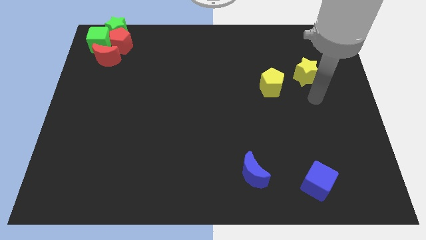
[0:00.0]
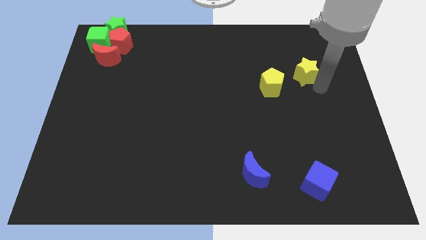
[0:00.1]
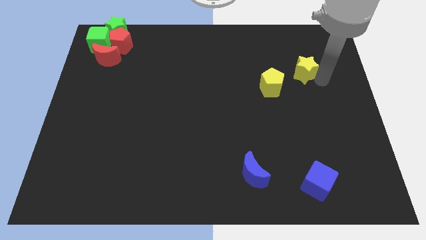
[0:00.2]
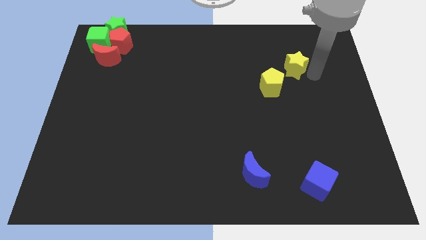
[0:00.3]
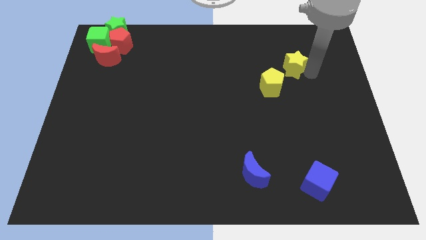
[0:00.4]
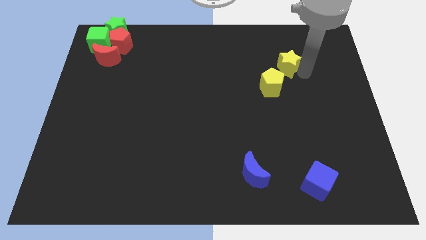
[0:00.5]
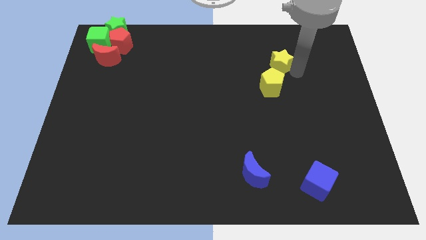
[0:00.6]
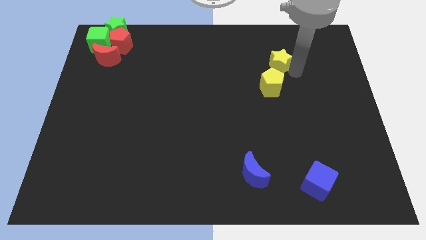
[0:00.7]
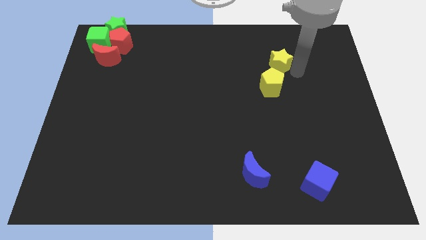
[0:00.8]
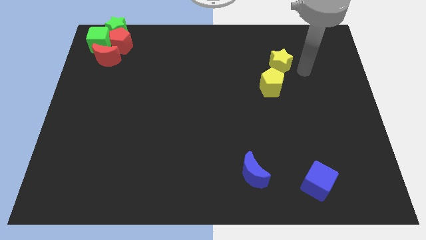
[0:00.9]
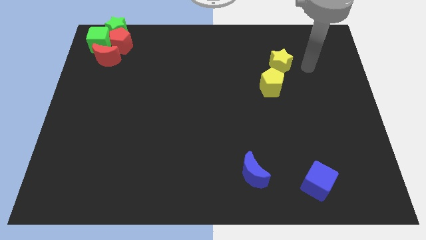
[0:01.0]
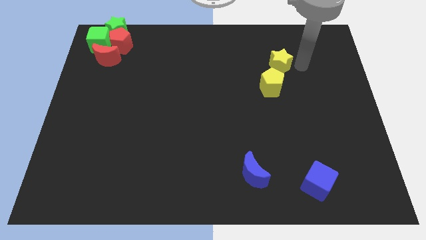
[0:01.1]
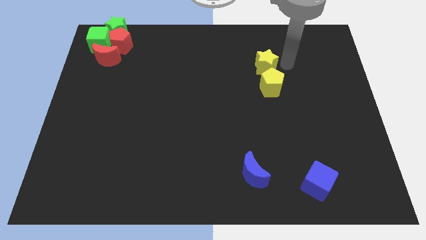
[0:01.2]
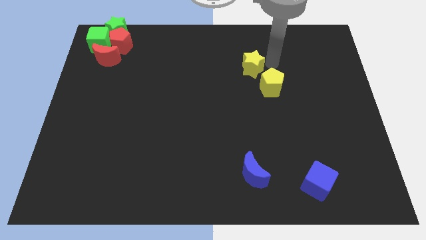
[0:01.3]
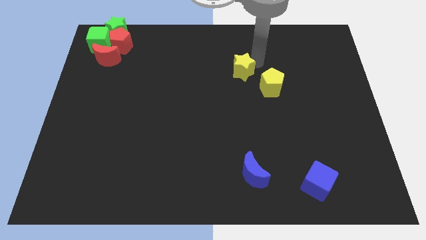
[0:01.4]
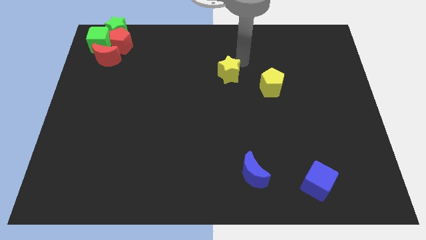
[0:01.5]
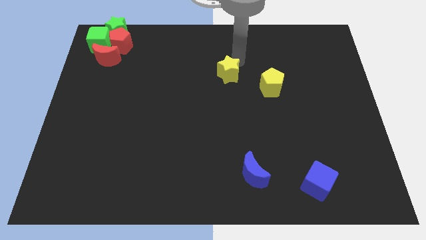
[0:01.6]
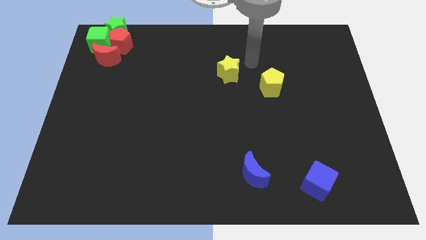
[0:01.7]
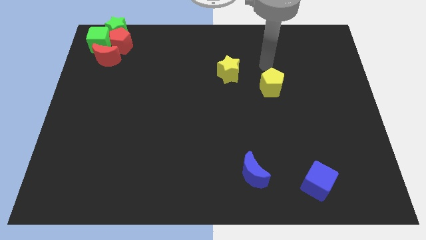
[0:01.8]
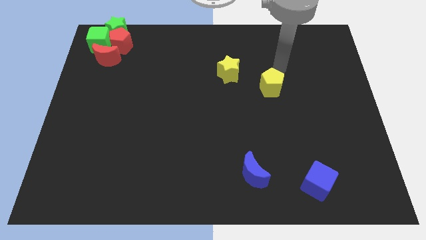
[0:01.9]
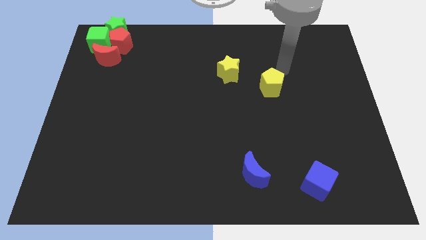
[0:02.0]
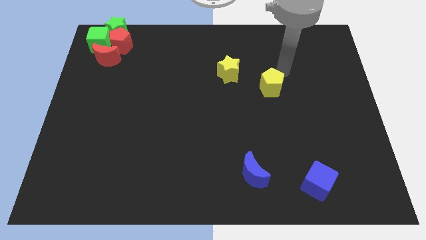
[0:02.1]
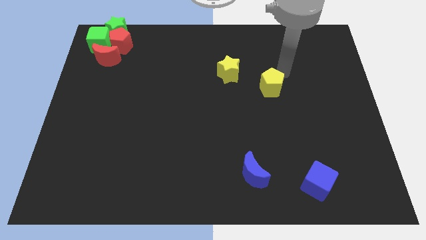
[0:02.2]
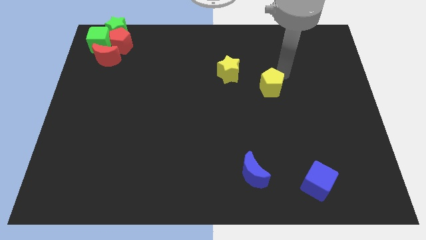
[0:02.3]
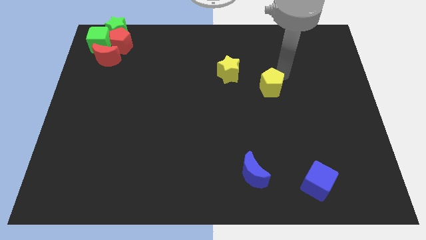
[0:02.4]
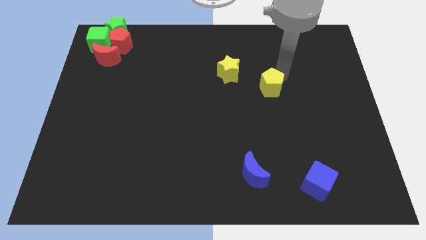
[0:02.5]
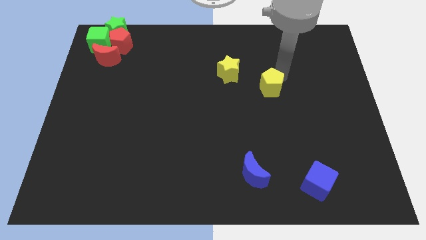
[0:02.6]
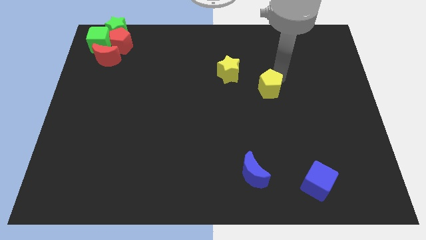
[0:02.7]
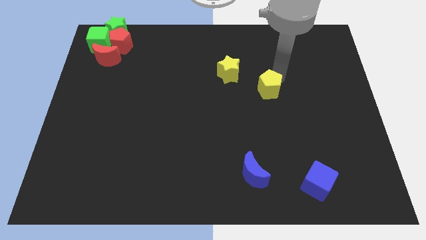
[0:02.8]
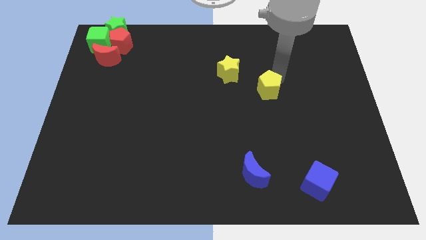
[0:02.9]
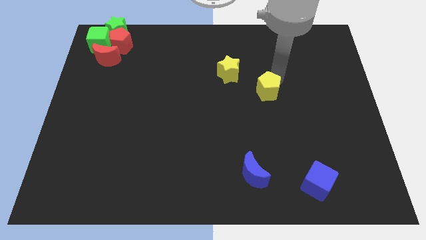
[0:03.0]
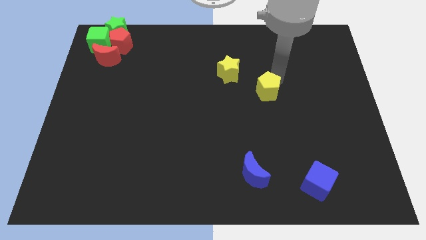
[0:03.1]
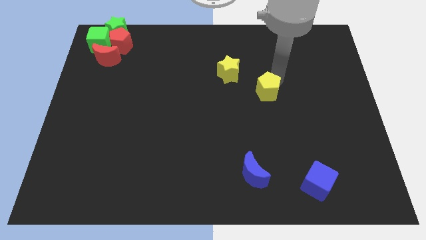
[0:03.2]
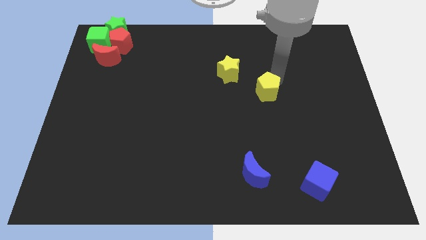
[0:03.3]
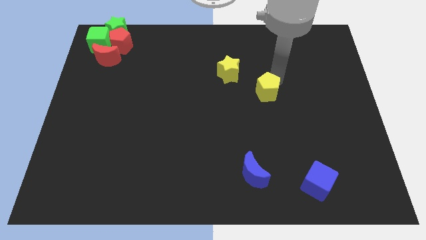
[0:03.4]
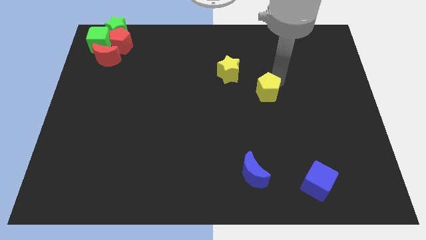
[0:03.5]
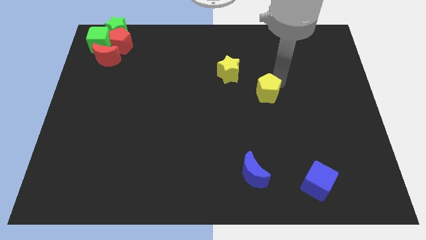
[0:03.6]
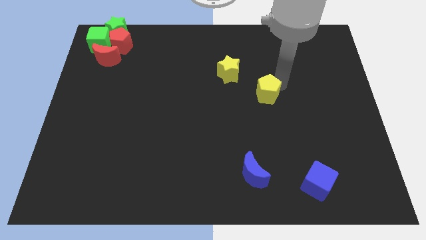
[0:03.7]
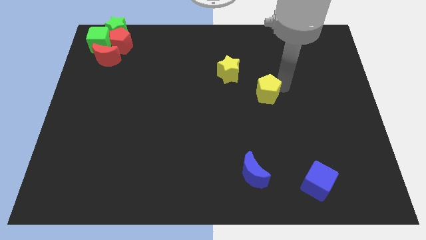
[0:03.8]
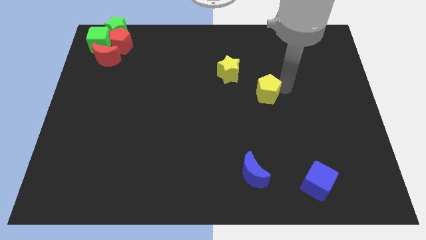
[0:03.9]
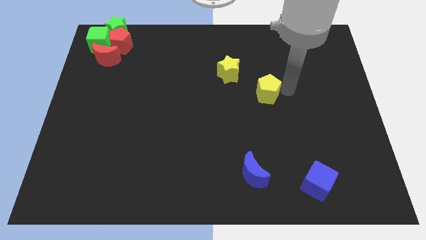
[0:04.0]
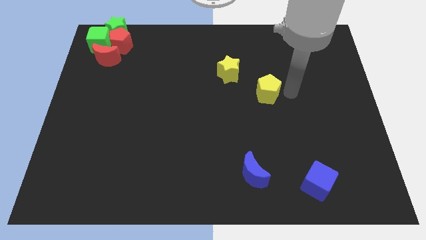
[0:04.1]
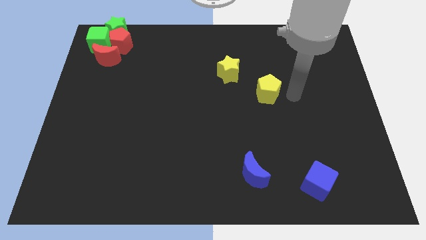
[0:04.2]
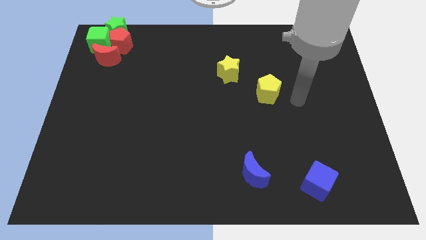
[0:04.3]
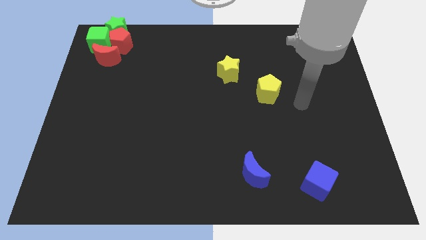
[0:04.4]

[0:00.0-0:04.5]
adjust both the yellow blocks diagonal to each other

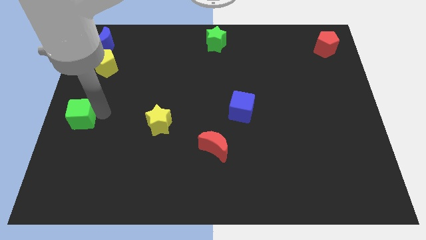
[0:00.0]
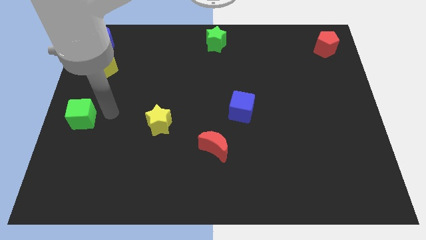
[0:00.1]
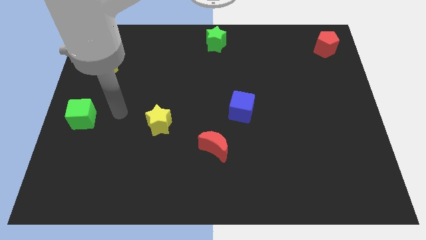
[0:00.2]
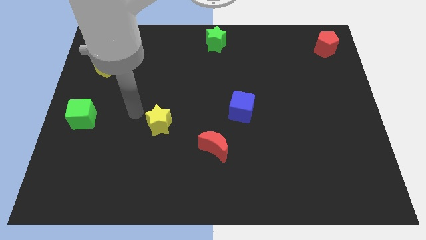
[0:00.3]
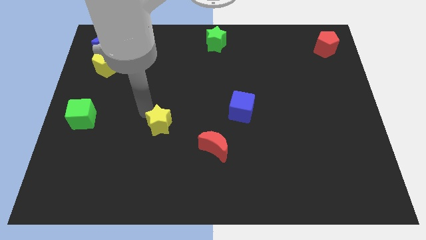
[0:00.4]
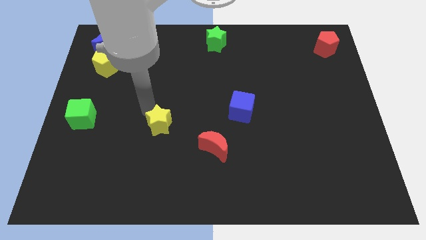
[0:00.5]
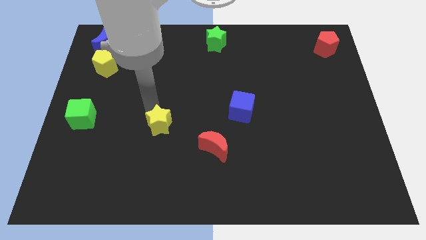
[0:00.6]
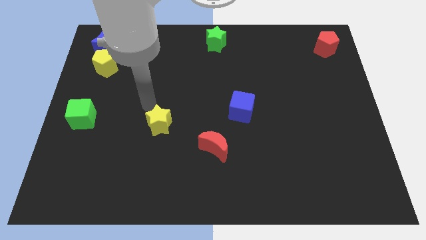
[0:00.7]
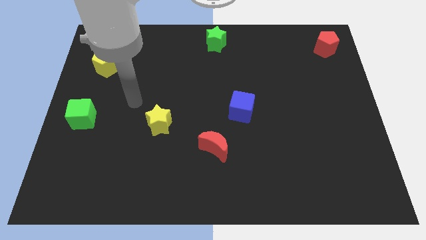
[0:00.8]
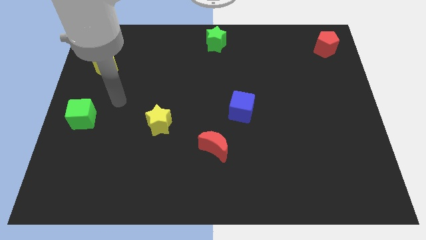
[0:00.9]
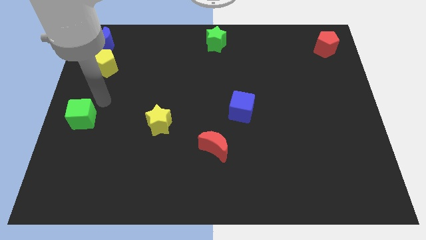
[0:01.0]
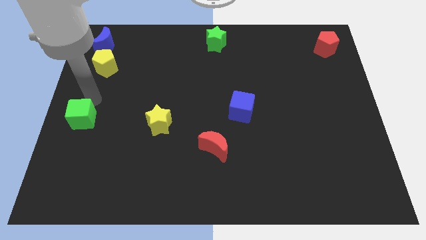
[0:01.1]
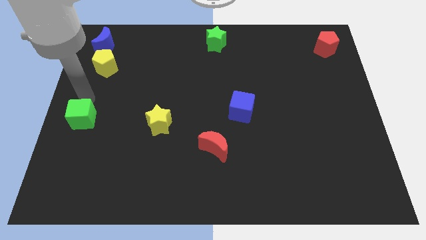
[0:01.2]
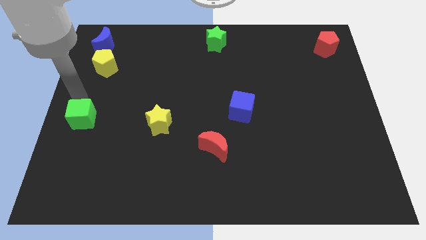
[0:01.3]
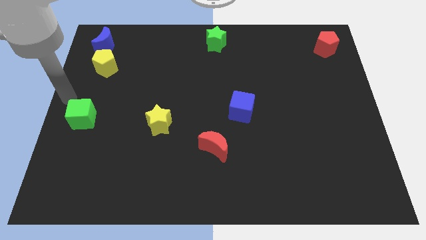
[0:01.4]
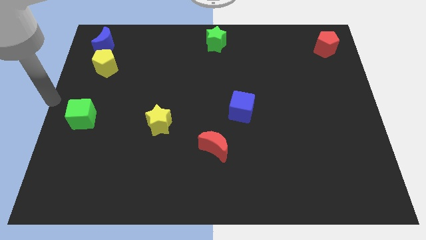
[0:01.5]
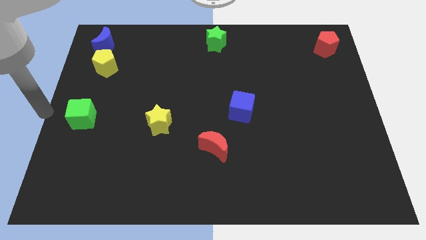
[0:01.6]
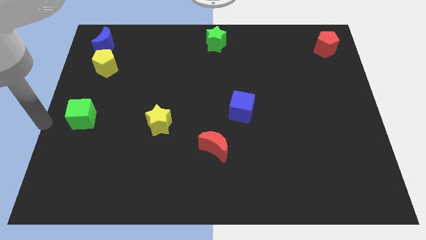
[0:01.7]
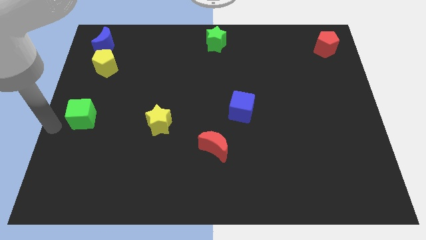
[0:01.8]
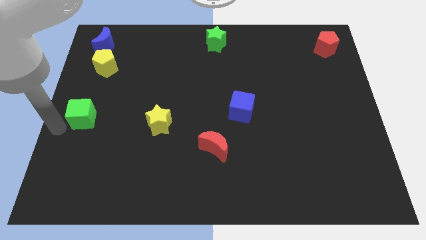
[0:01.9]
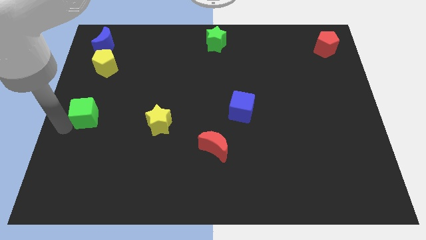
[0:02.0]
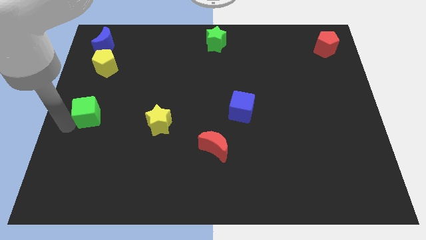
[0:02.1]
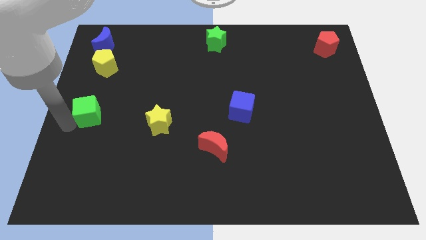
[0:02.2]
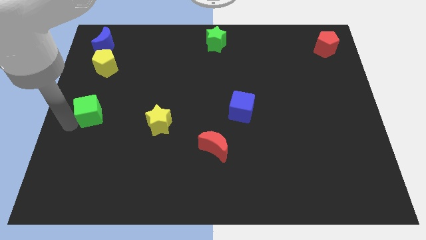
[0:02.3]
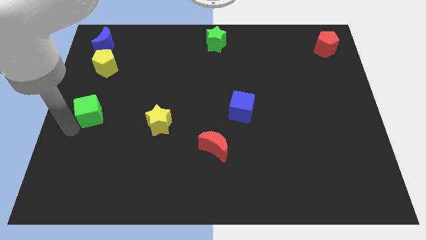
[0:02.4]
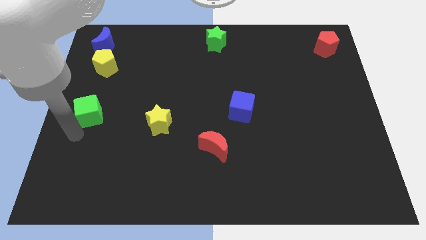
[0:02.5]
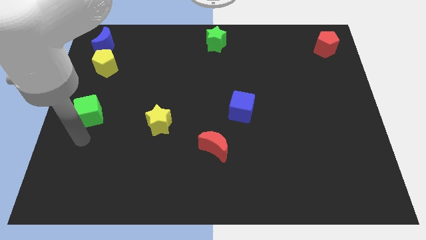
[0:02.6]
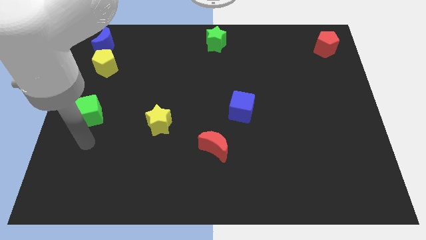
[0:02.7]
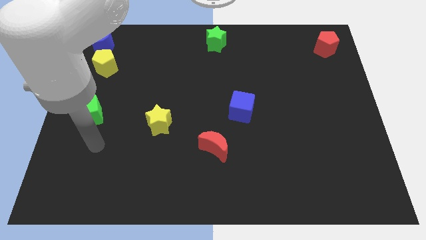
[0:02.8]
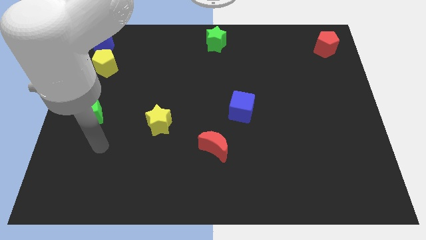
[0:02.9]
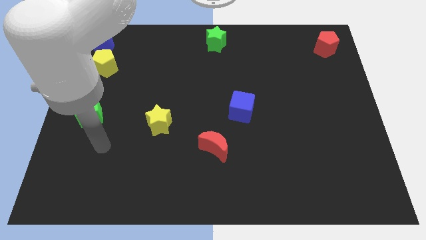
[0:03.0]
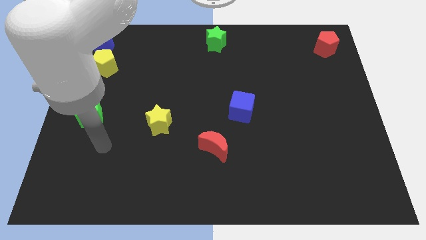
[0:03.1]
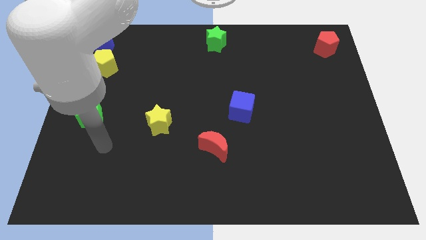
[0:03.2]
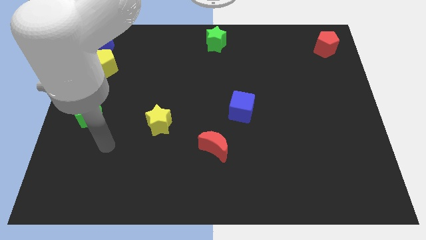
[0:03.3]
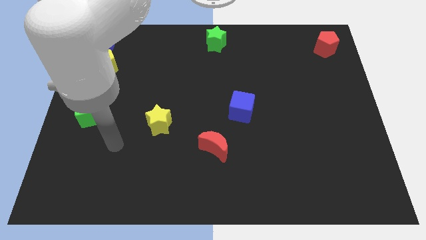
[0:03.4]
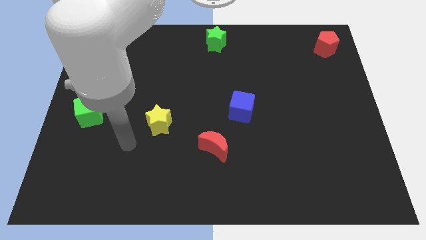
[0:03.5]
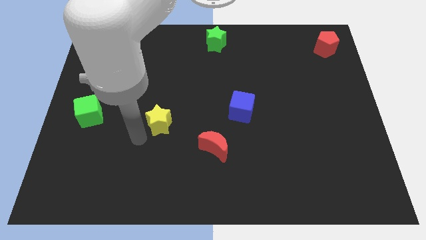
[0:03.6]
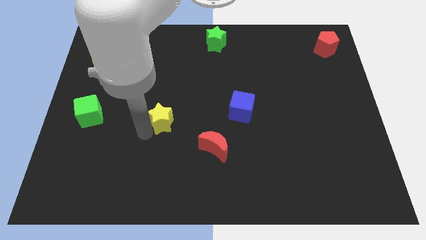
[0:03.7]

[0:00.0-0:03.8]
point your arm below the yellow star

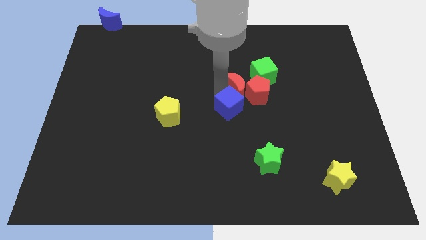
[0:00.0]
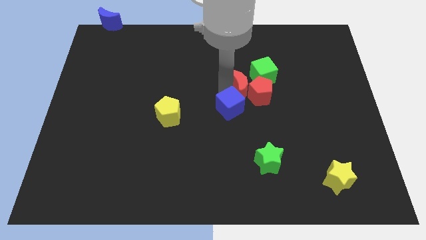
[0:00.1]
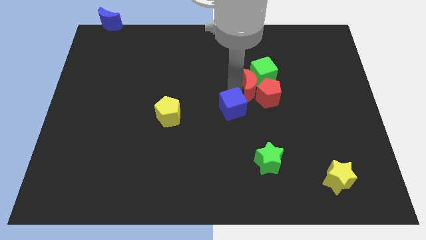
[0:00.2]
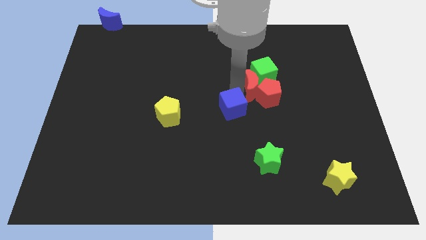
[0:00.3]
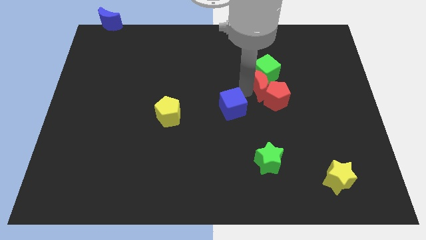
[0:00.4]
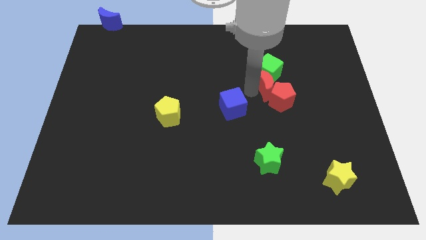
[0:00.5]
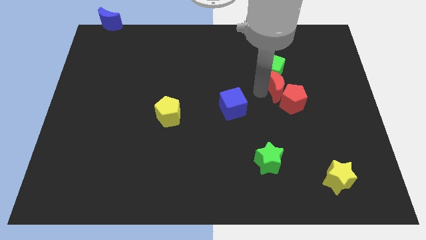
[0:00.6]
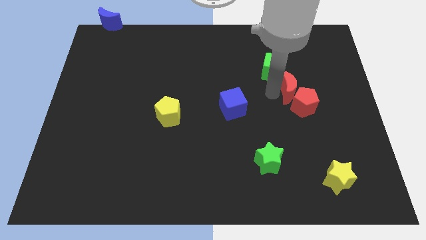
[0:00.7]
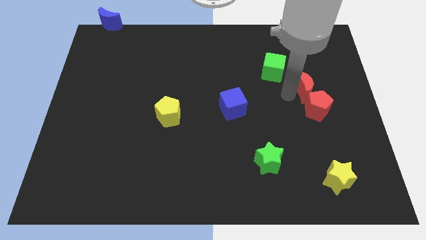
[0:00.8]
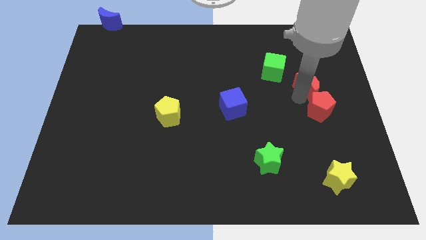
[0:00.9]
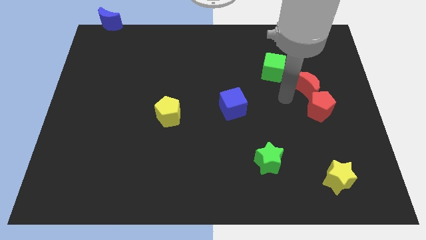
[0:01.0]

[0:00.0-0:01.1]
move the red pentagon and red crescent towards the right center
